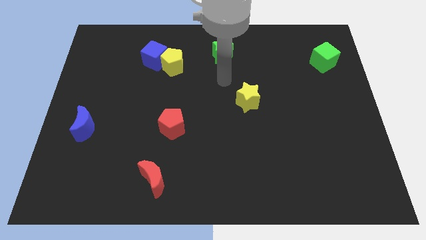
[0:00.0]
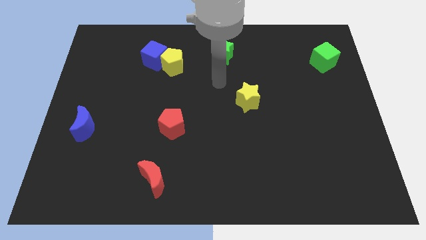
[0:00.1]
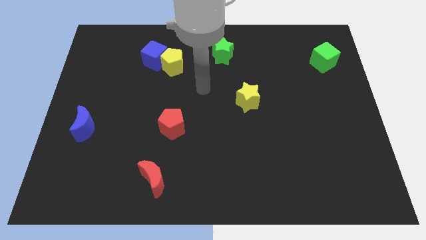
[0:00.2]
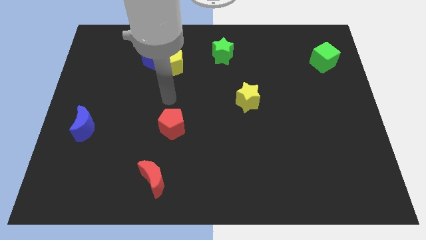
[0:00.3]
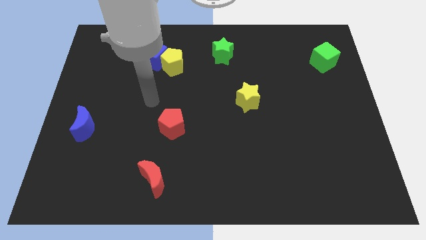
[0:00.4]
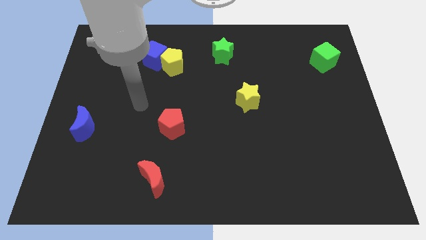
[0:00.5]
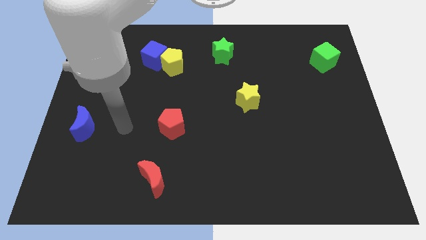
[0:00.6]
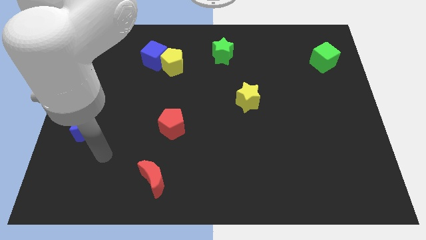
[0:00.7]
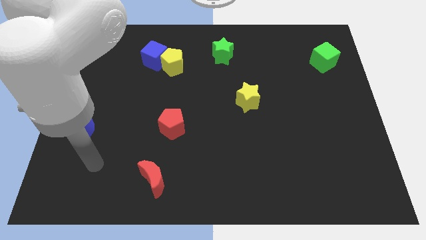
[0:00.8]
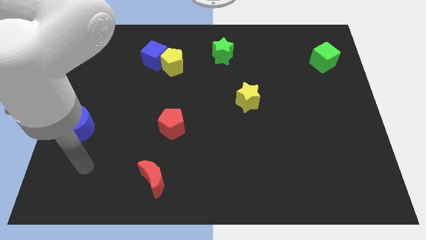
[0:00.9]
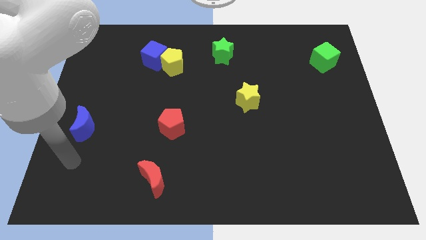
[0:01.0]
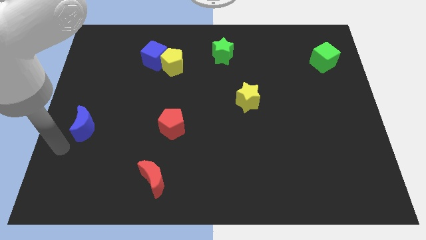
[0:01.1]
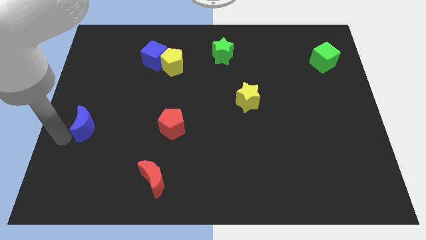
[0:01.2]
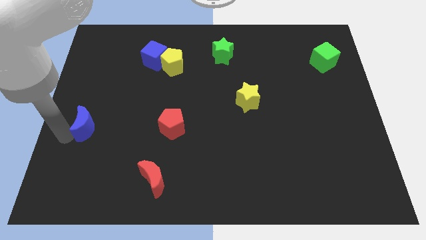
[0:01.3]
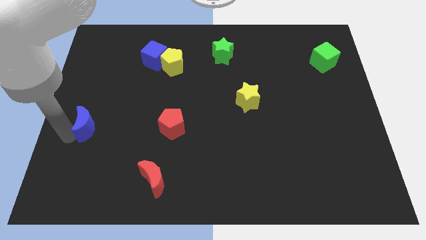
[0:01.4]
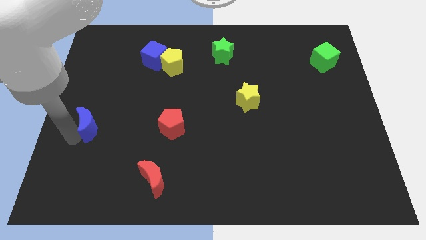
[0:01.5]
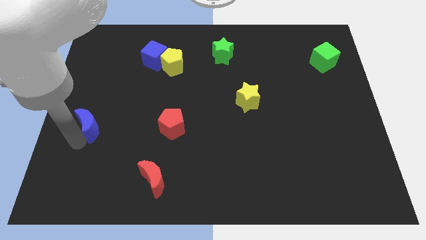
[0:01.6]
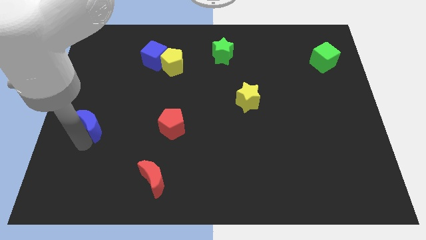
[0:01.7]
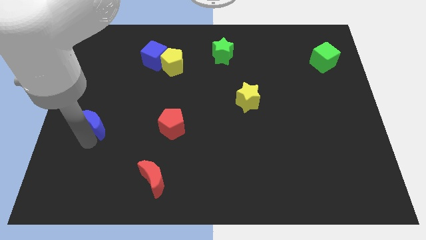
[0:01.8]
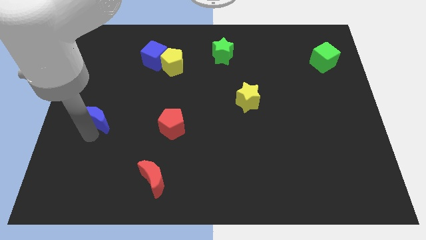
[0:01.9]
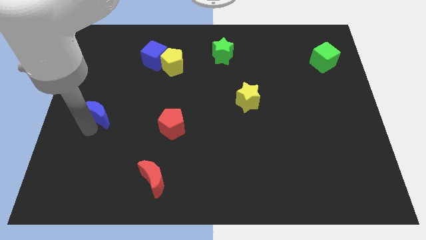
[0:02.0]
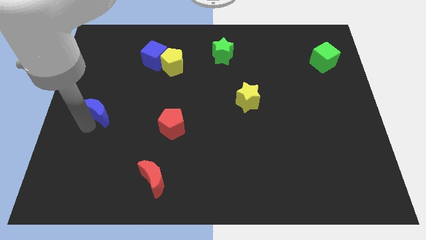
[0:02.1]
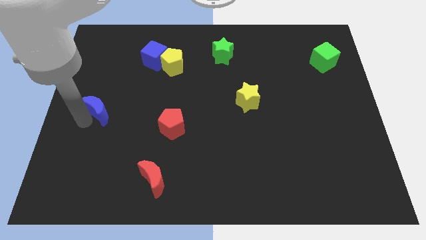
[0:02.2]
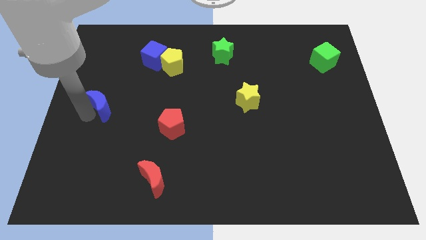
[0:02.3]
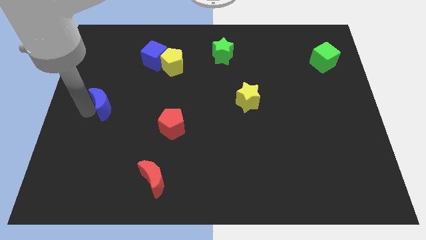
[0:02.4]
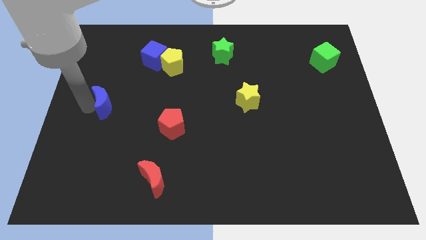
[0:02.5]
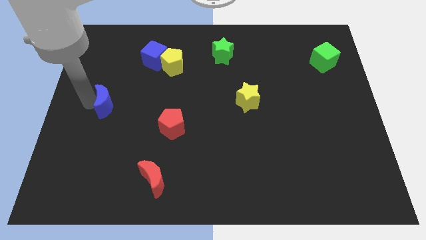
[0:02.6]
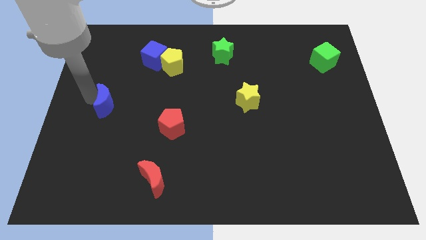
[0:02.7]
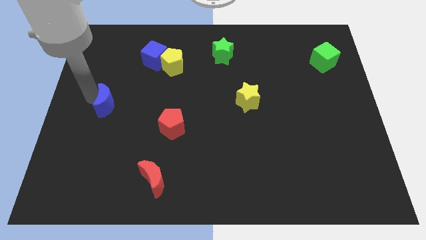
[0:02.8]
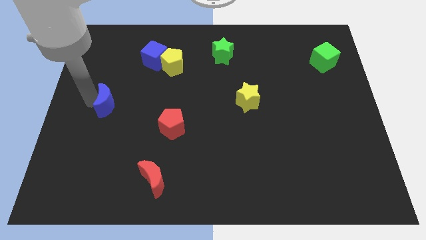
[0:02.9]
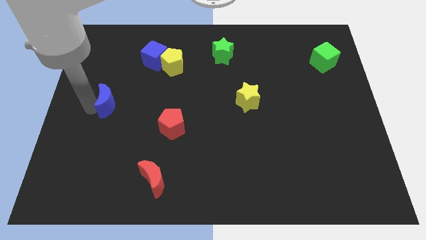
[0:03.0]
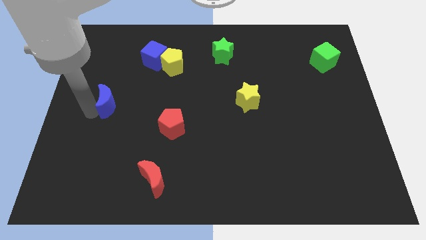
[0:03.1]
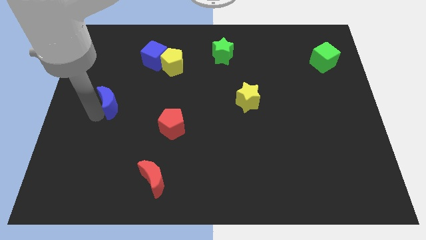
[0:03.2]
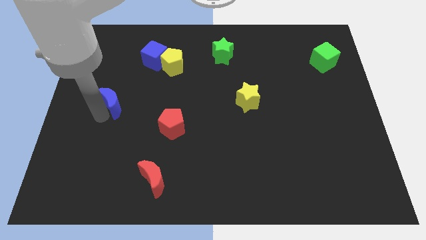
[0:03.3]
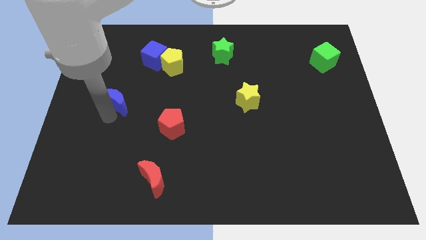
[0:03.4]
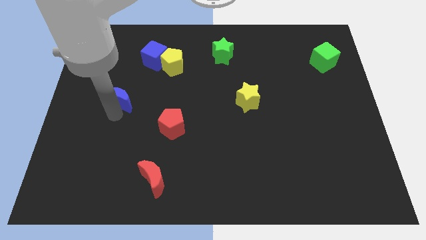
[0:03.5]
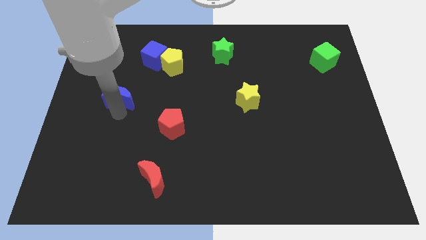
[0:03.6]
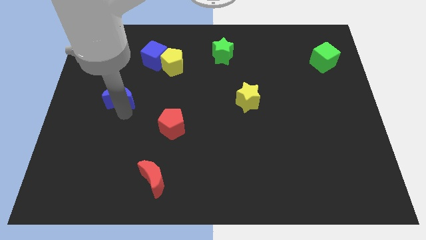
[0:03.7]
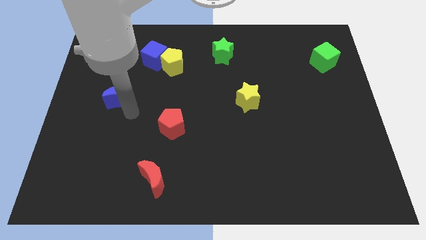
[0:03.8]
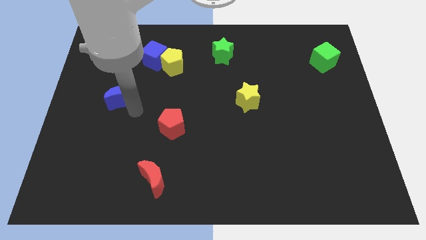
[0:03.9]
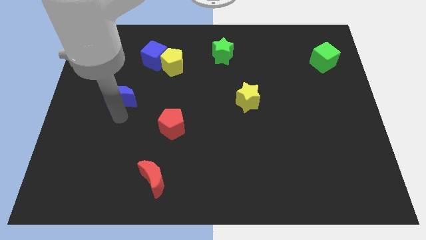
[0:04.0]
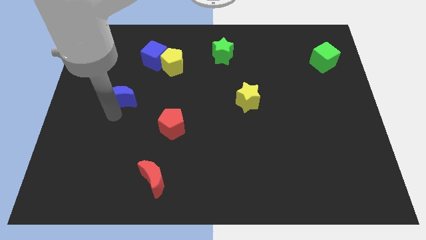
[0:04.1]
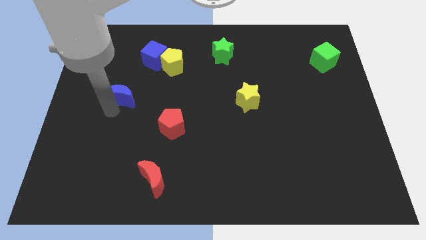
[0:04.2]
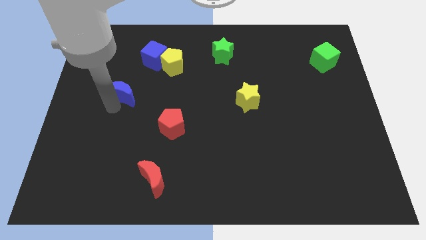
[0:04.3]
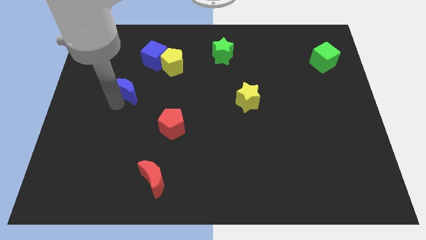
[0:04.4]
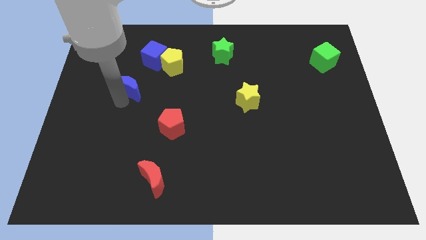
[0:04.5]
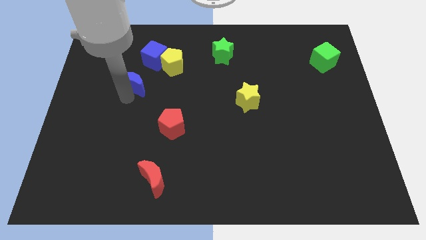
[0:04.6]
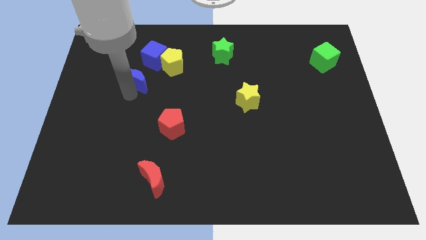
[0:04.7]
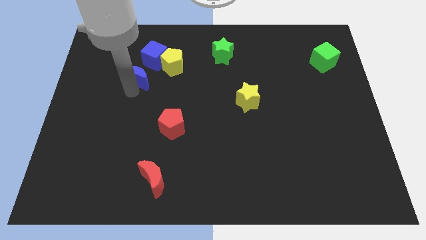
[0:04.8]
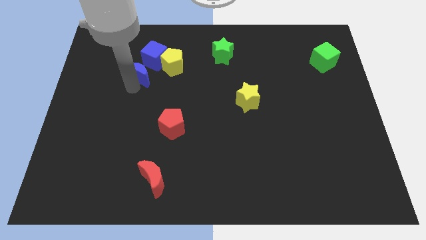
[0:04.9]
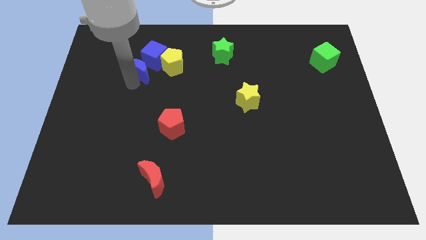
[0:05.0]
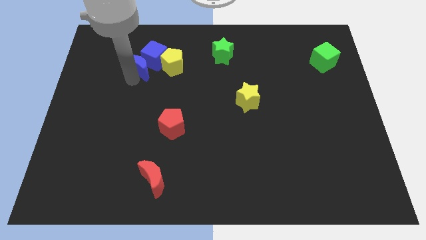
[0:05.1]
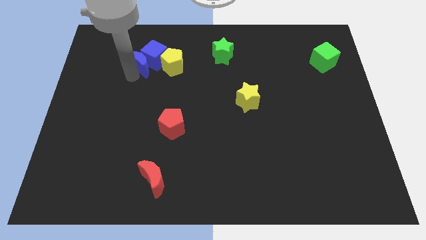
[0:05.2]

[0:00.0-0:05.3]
push the blue moon towards the blue cube

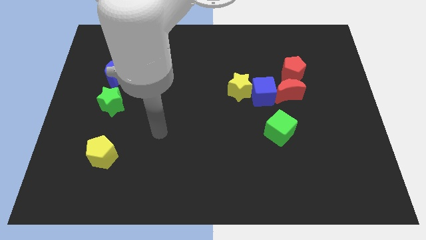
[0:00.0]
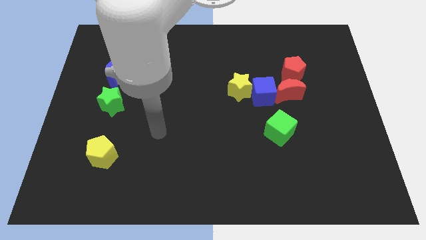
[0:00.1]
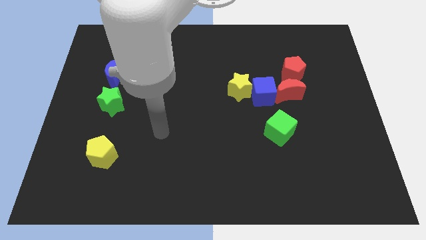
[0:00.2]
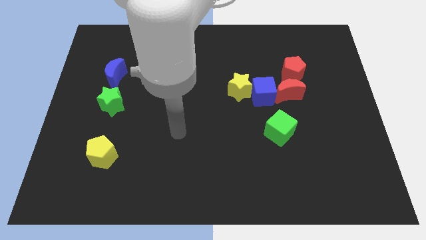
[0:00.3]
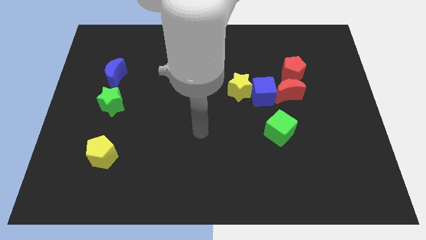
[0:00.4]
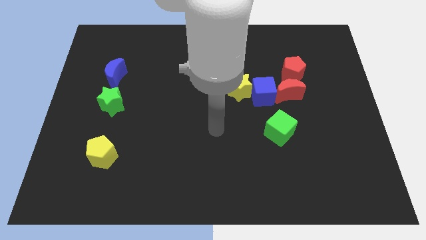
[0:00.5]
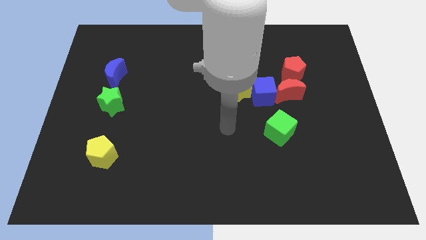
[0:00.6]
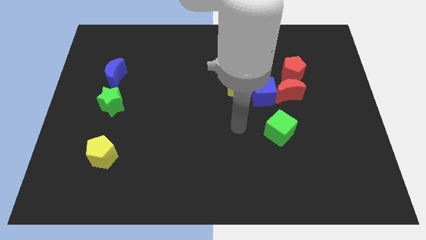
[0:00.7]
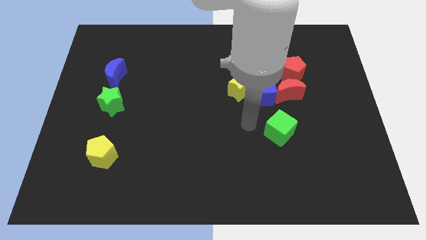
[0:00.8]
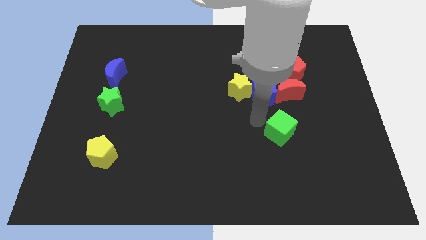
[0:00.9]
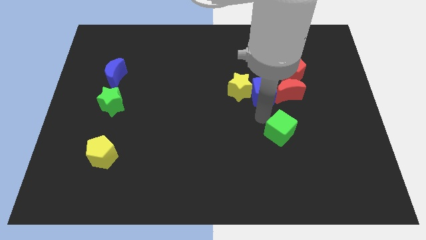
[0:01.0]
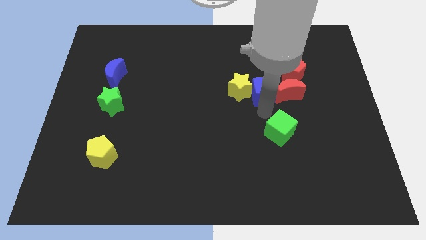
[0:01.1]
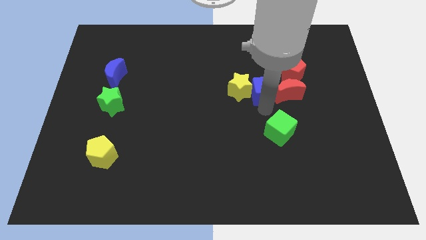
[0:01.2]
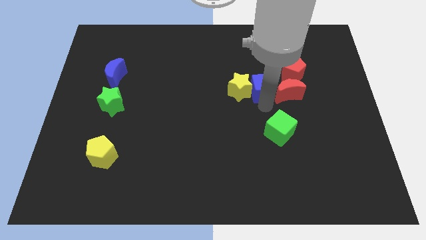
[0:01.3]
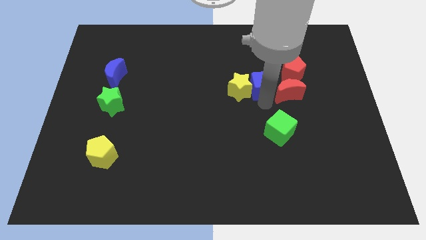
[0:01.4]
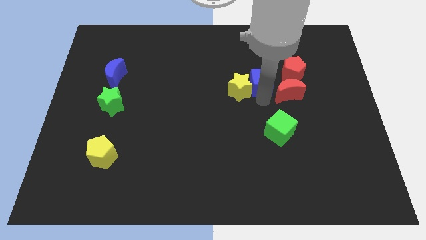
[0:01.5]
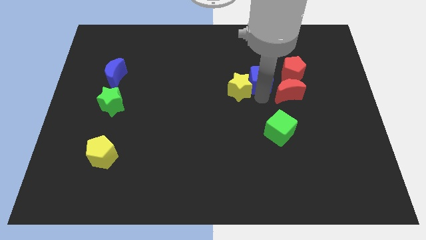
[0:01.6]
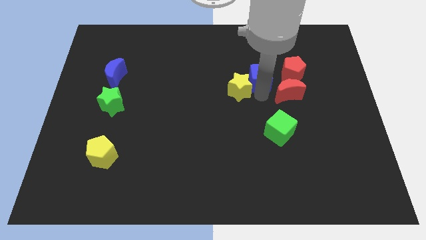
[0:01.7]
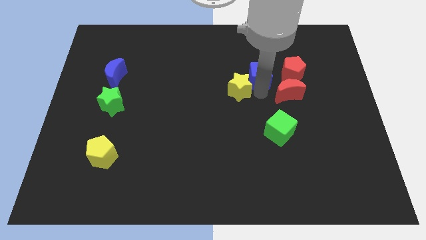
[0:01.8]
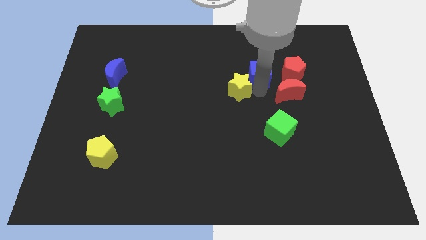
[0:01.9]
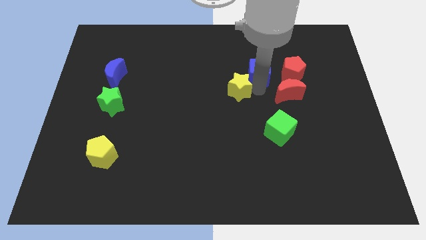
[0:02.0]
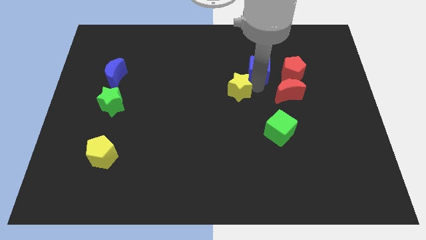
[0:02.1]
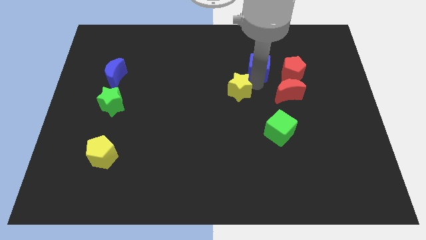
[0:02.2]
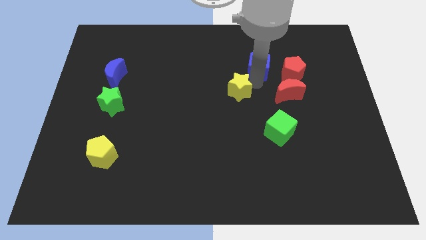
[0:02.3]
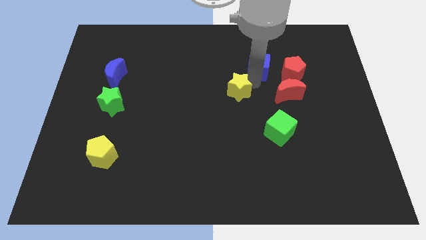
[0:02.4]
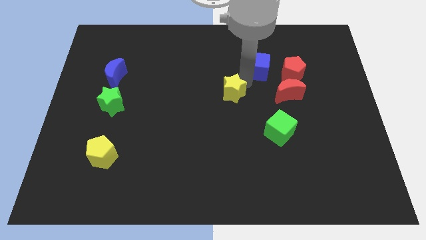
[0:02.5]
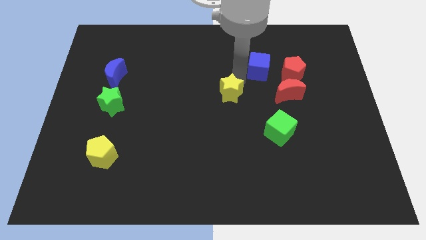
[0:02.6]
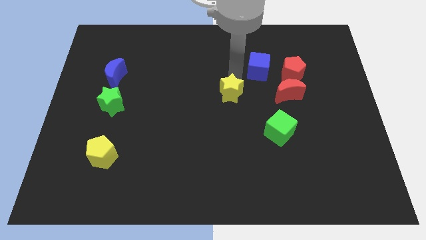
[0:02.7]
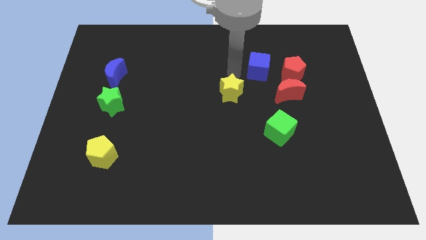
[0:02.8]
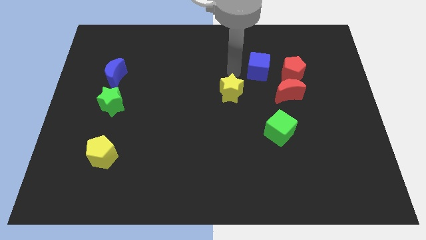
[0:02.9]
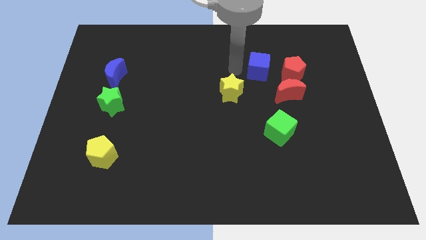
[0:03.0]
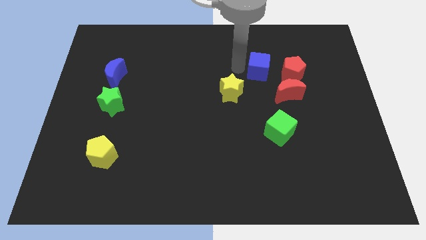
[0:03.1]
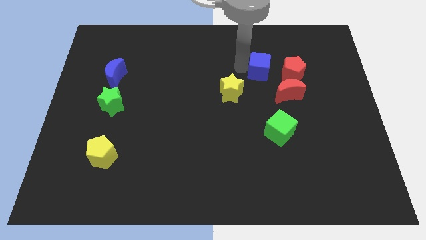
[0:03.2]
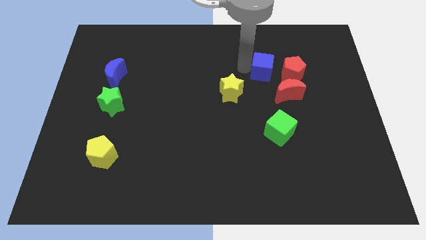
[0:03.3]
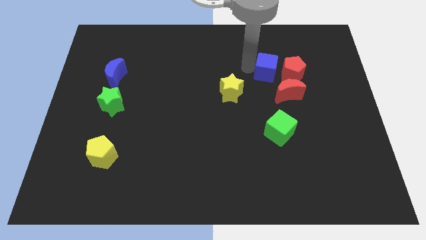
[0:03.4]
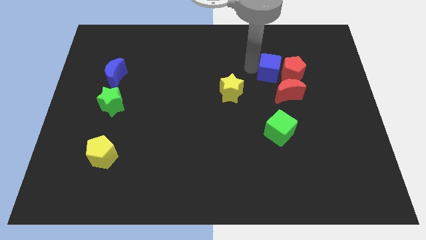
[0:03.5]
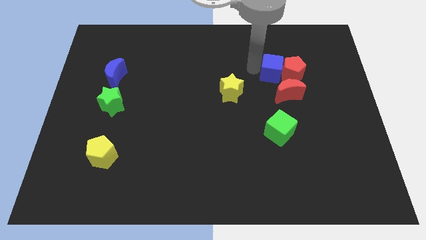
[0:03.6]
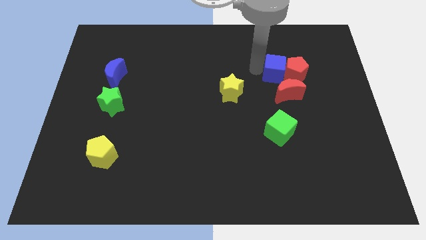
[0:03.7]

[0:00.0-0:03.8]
move the blue cube next to the red pentagon
